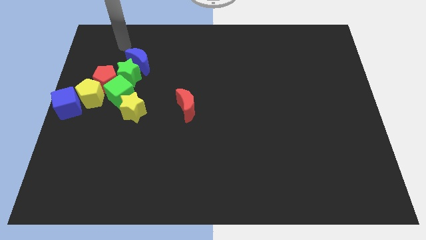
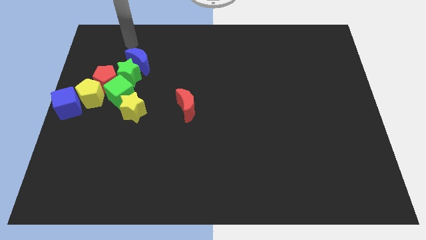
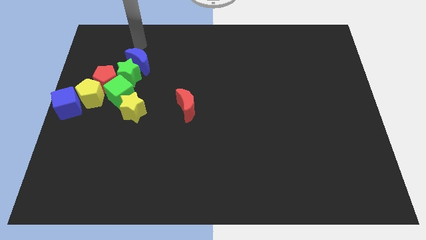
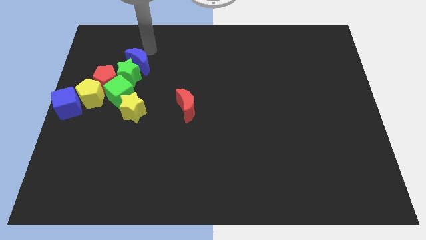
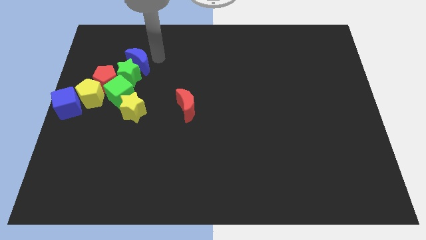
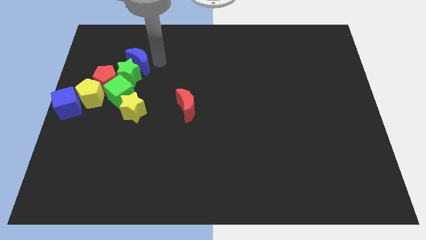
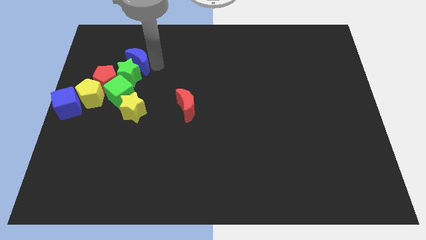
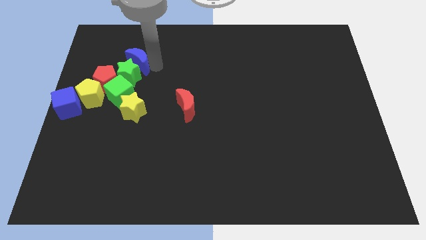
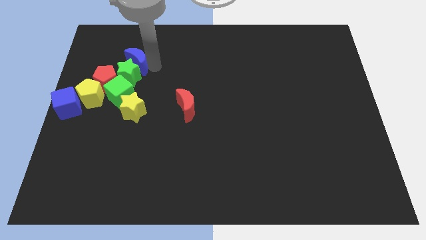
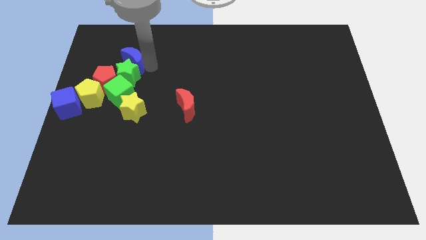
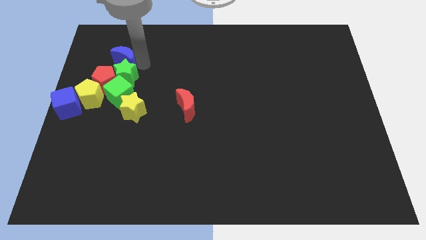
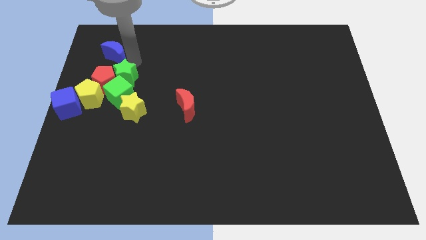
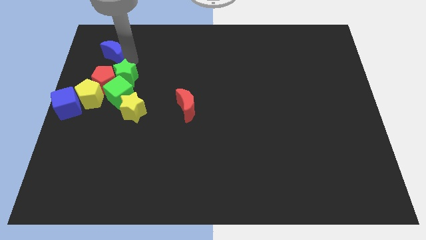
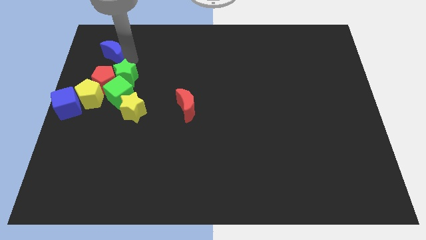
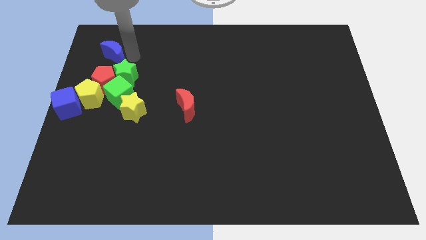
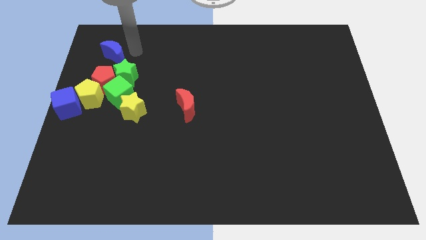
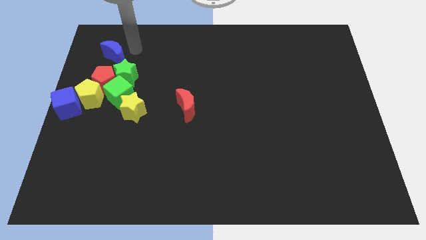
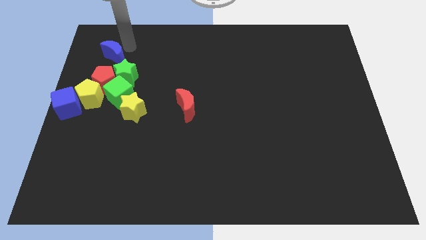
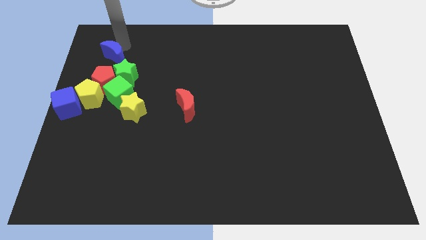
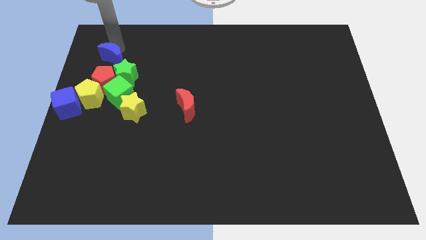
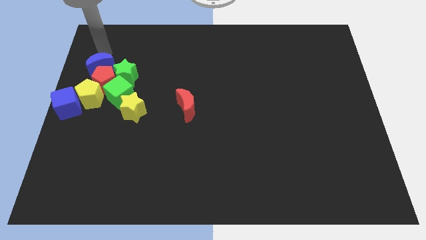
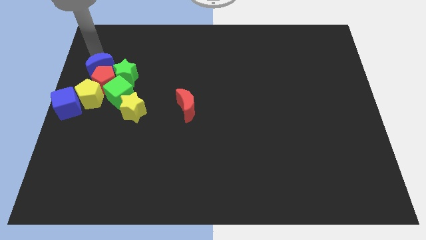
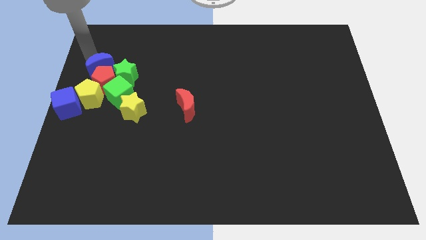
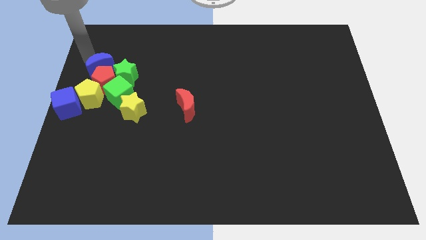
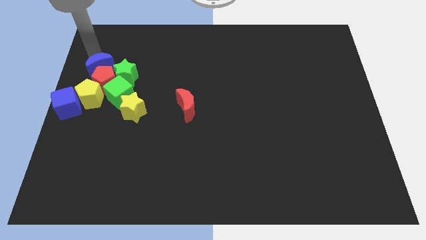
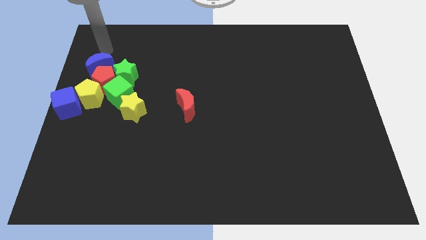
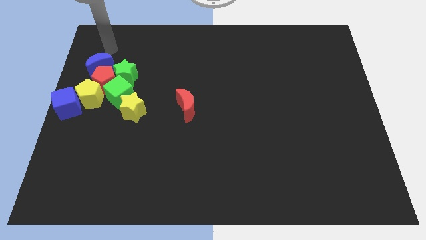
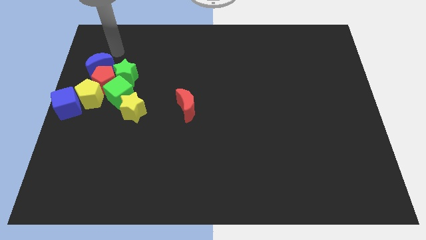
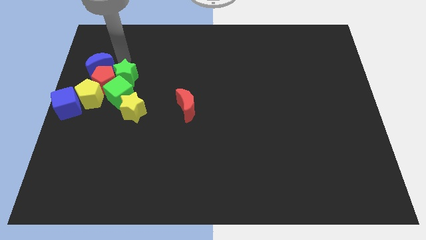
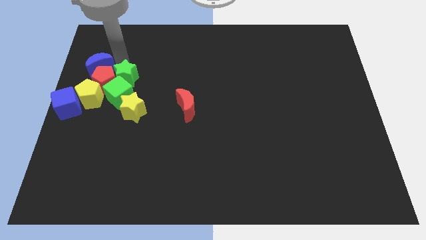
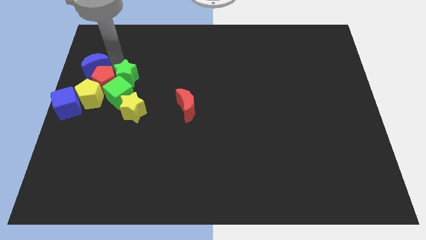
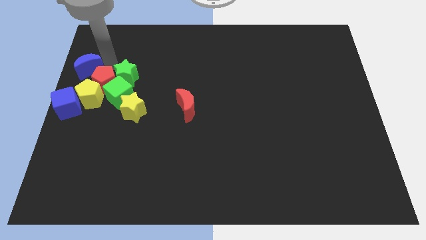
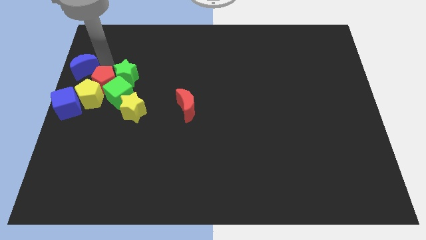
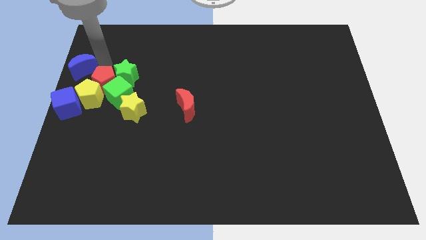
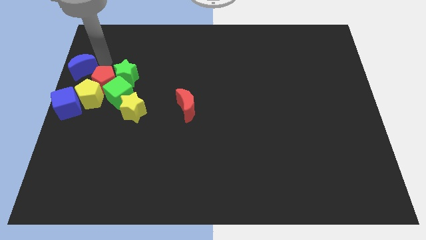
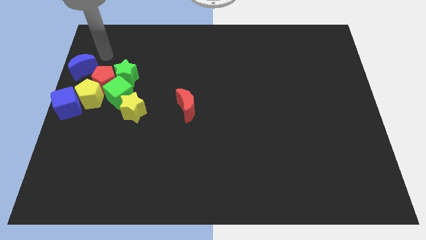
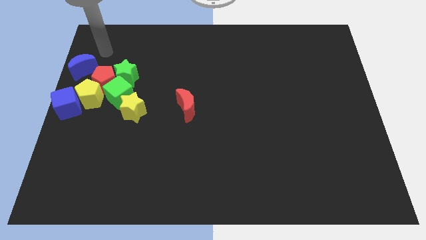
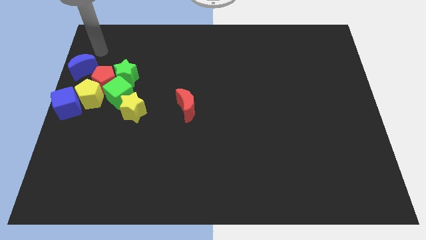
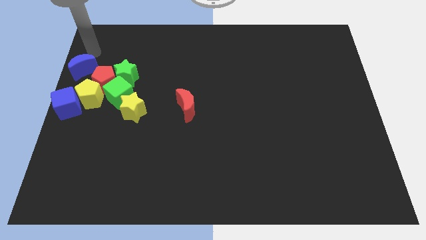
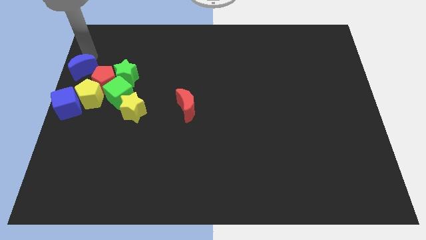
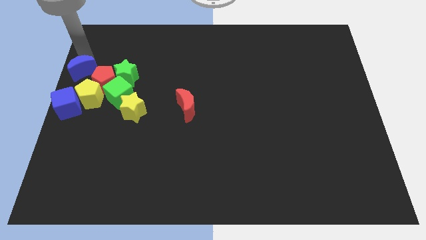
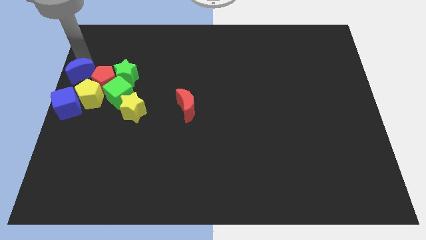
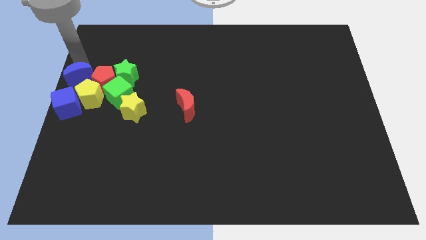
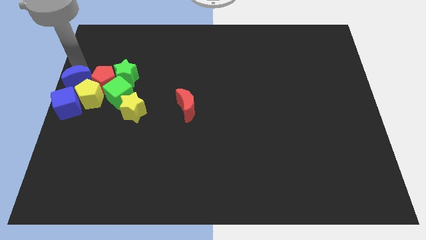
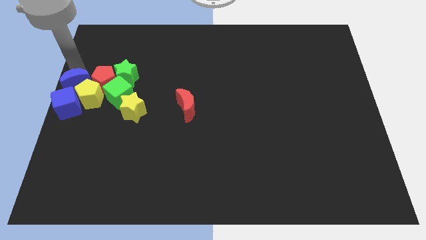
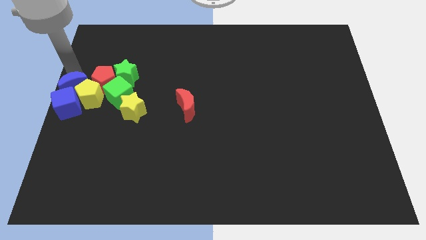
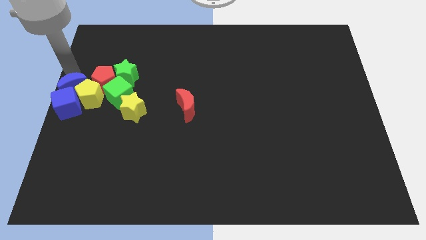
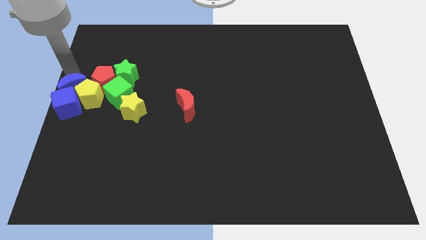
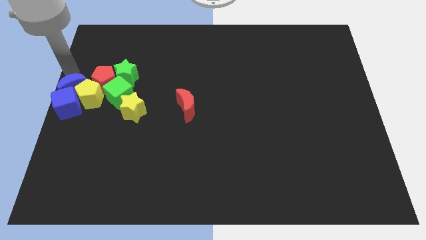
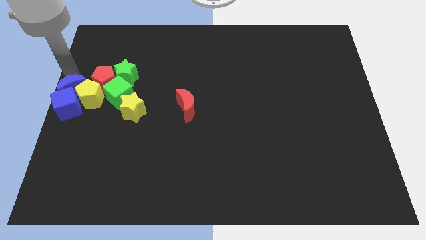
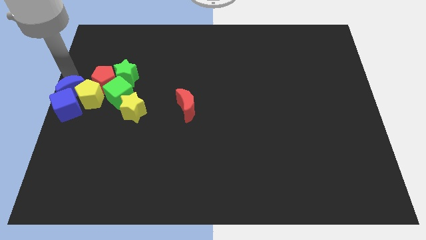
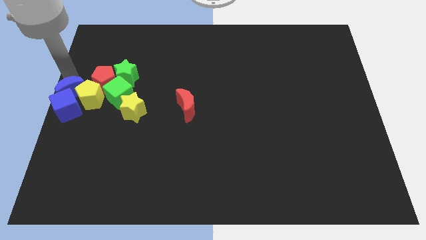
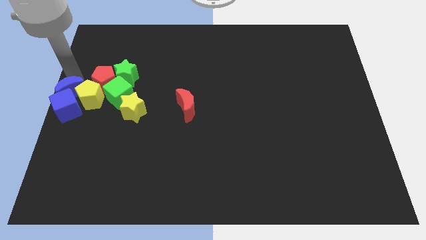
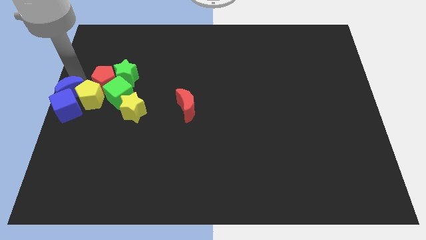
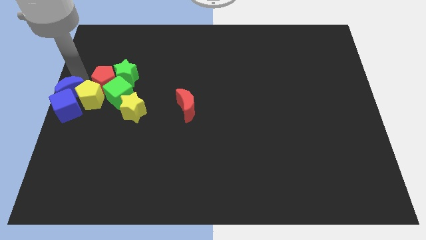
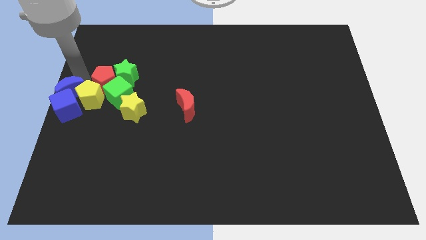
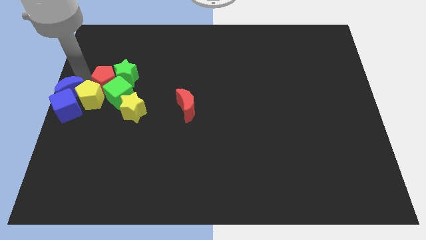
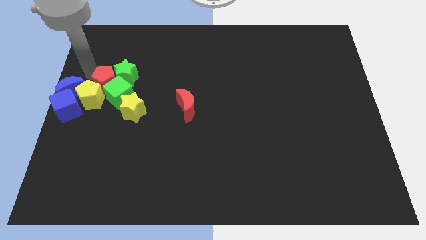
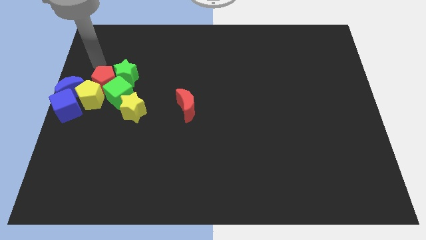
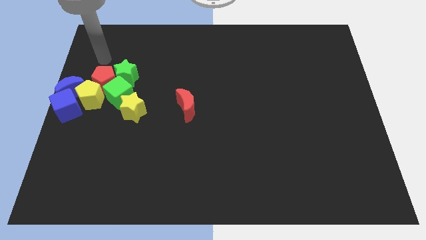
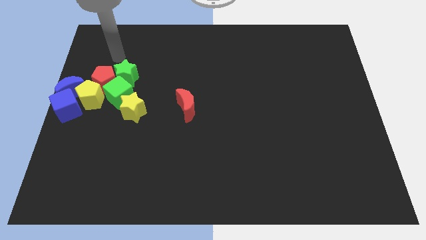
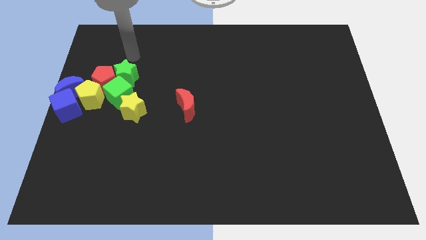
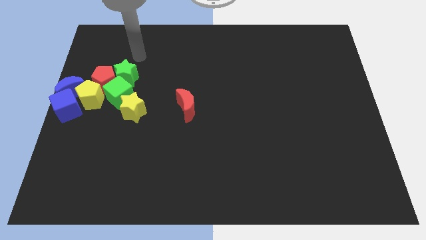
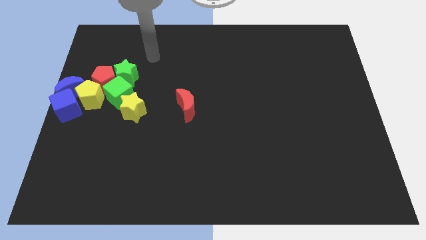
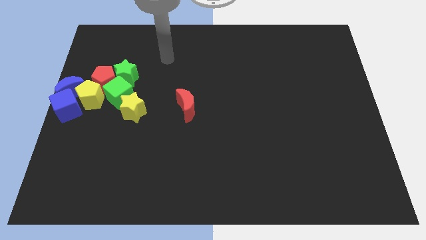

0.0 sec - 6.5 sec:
push the blue moon to the top of the blue cube

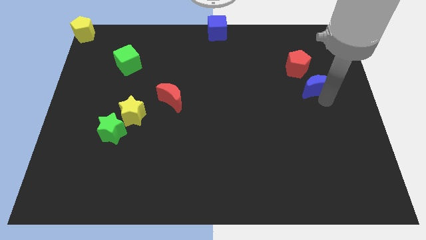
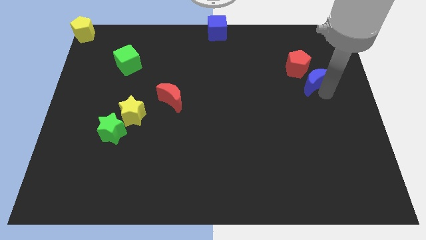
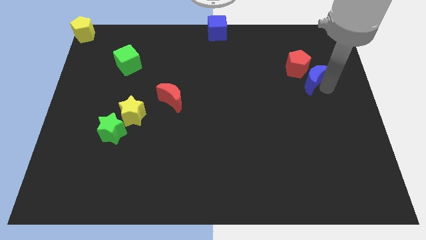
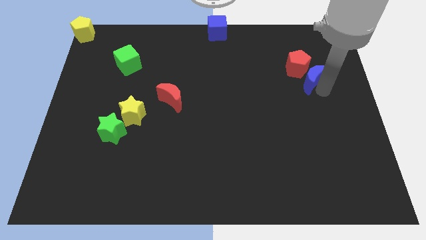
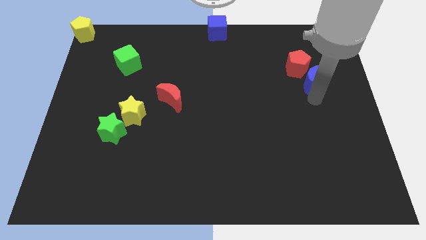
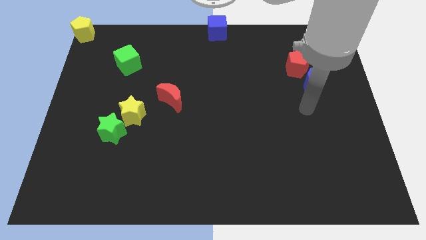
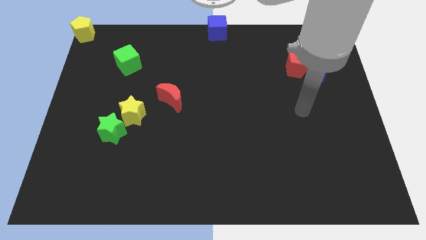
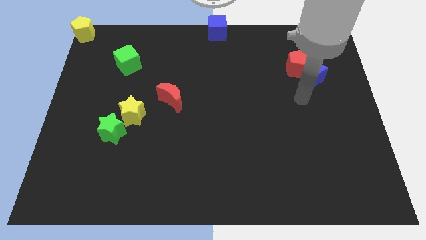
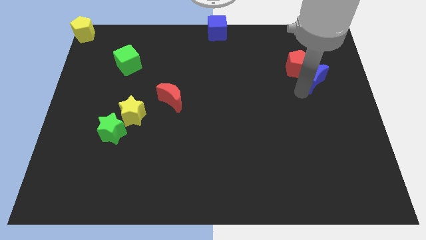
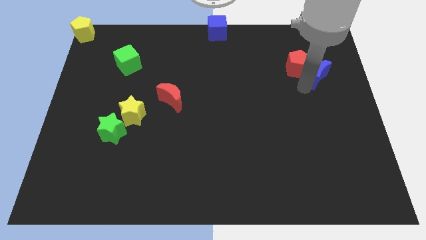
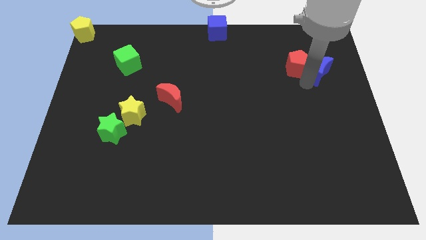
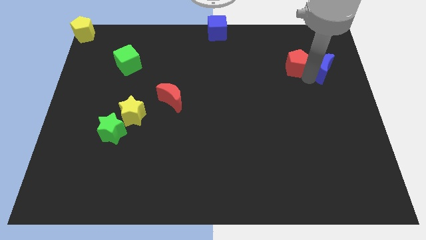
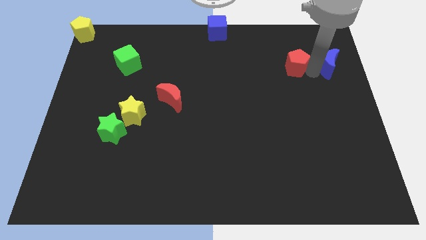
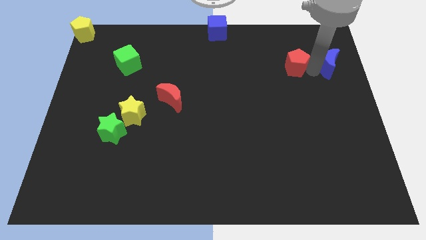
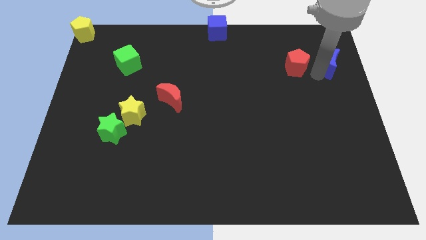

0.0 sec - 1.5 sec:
place the blue moon right to the red pentagon

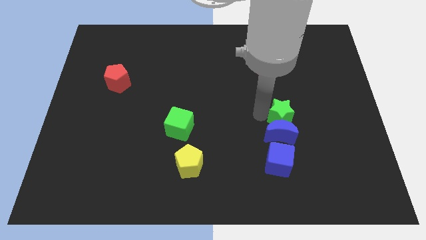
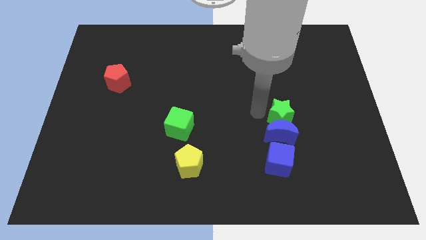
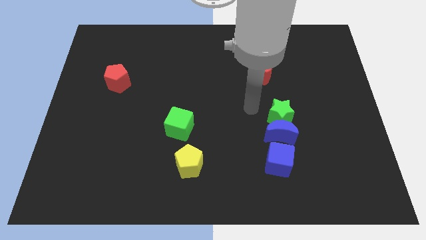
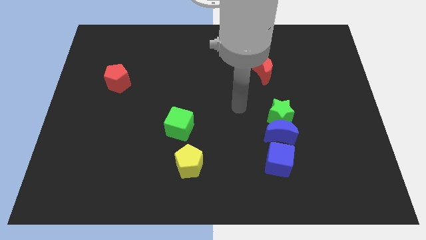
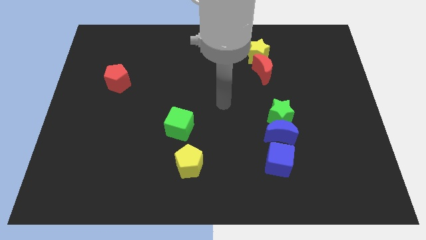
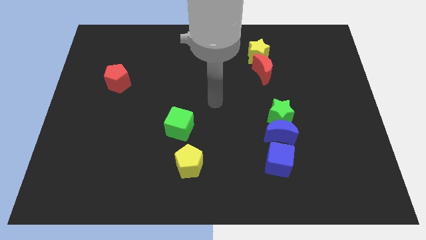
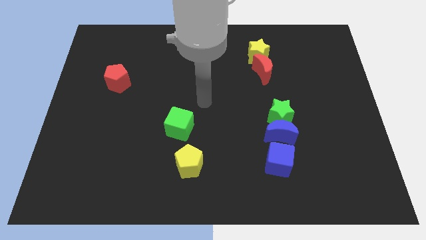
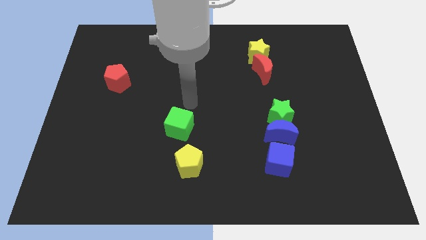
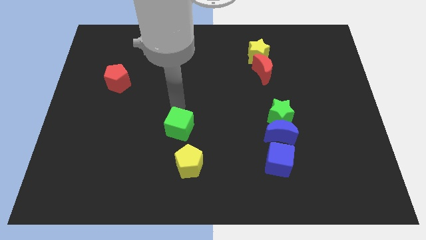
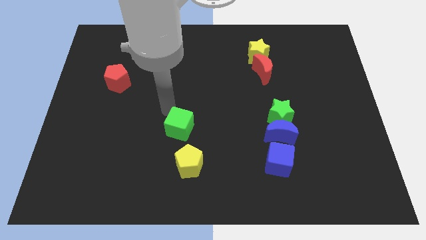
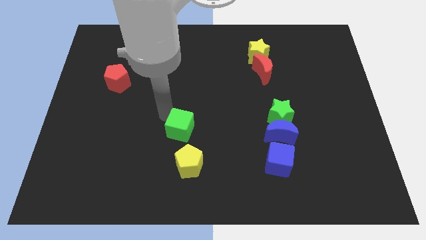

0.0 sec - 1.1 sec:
move your hand towards the green cube
